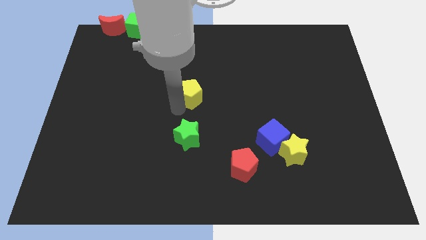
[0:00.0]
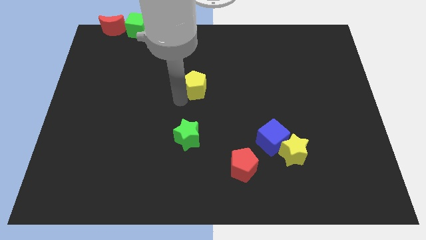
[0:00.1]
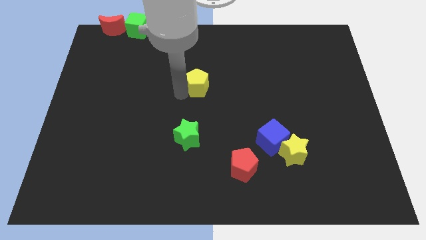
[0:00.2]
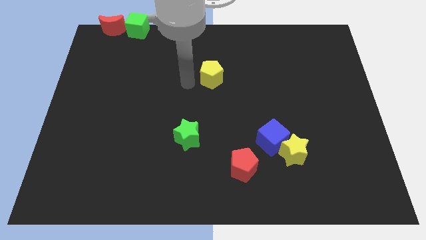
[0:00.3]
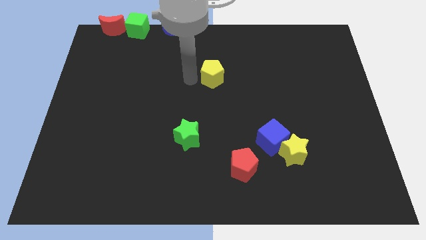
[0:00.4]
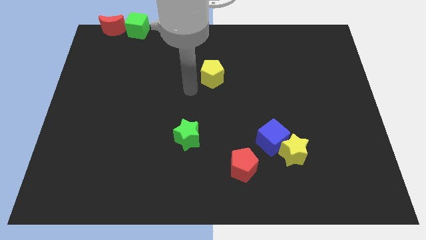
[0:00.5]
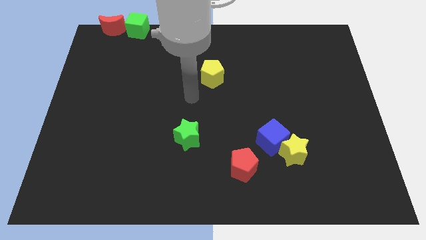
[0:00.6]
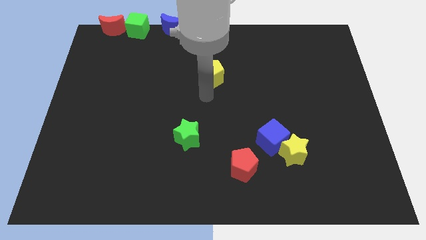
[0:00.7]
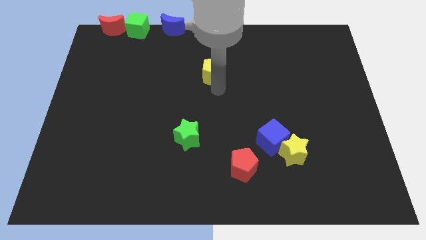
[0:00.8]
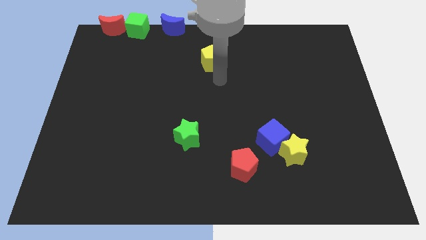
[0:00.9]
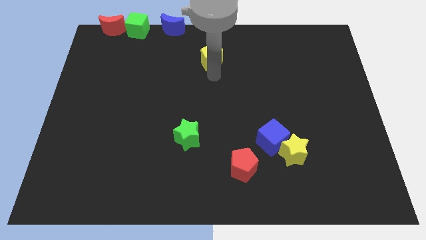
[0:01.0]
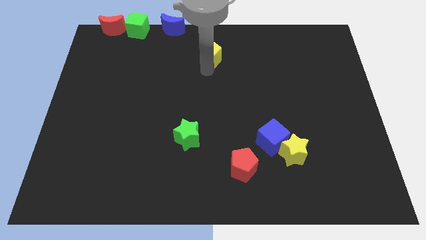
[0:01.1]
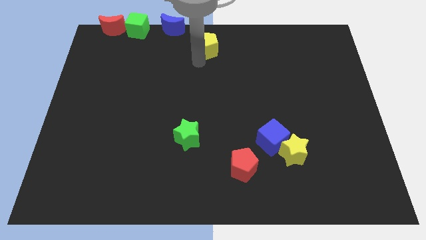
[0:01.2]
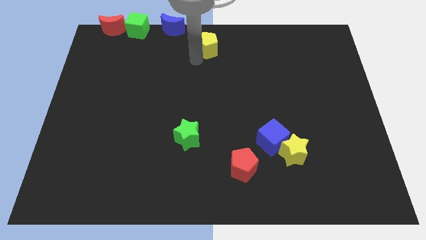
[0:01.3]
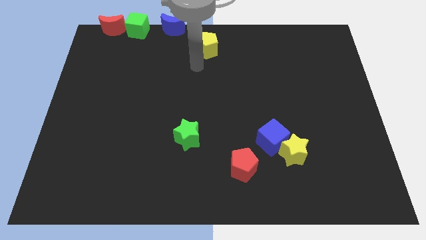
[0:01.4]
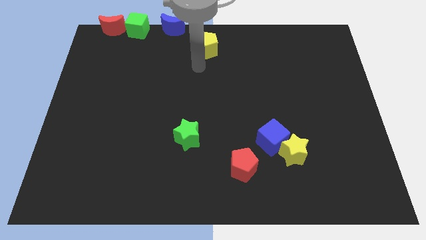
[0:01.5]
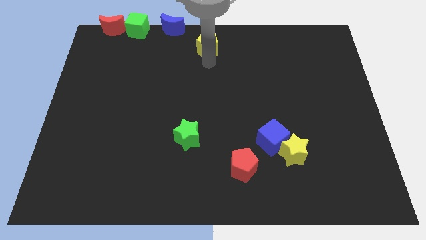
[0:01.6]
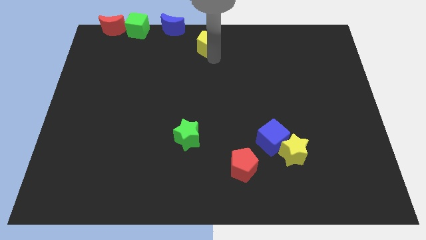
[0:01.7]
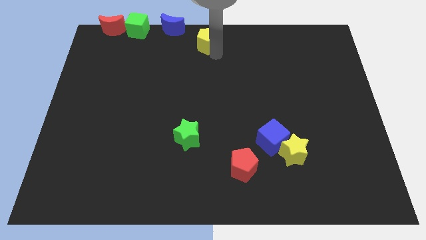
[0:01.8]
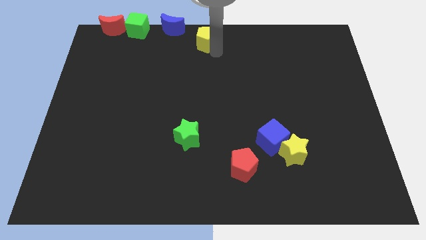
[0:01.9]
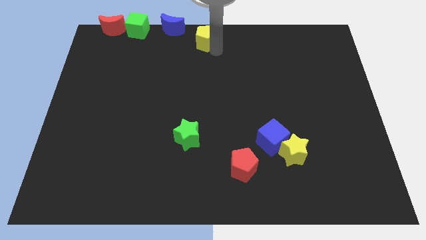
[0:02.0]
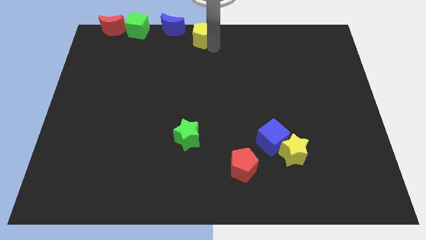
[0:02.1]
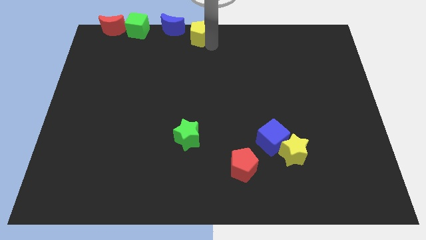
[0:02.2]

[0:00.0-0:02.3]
move the yellow pentagon to the right of the blue crescent

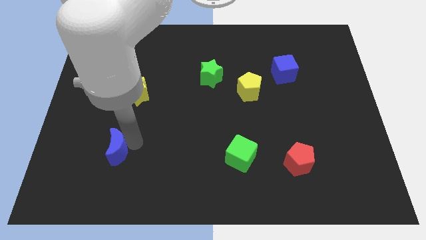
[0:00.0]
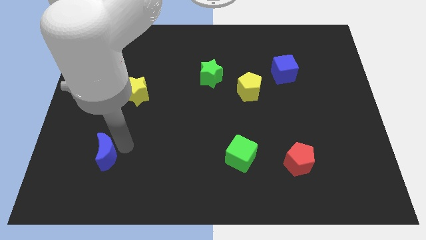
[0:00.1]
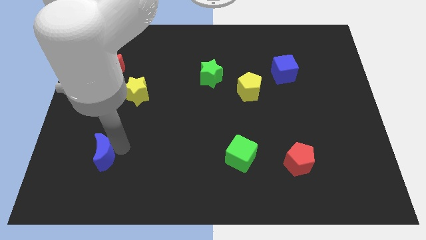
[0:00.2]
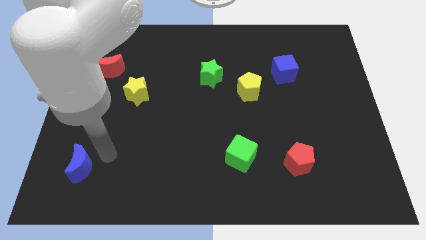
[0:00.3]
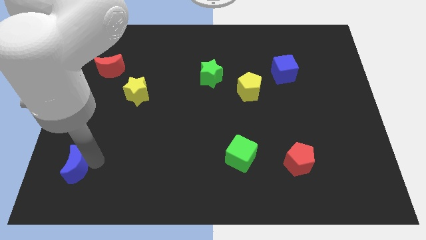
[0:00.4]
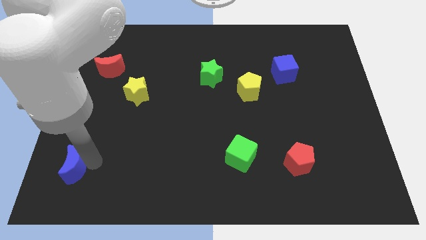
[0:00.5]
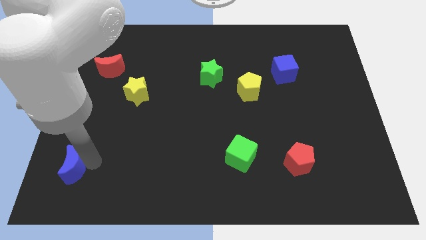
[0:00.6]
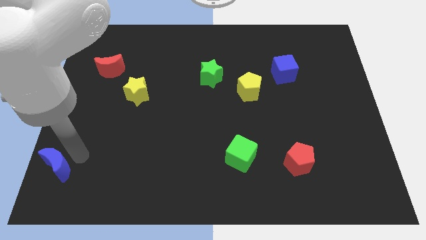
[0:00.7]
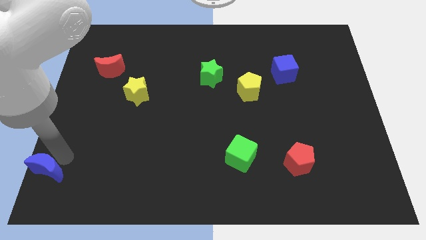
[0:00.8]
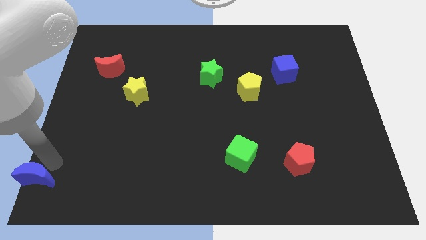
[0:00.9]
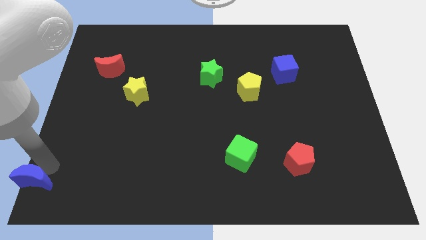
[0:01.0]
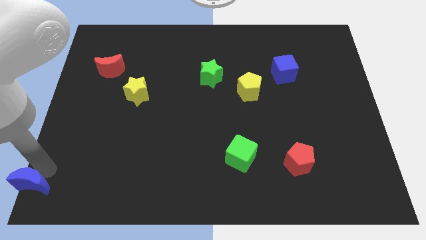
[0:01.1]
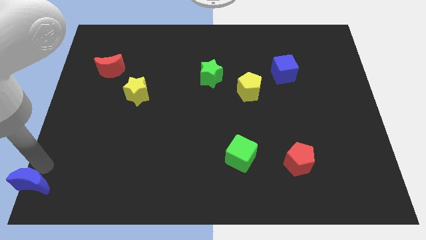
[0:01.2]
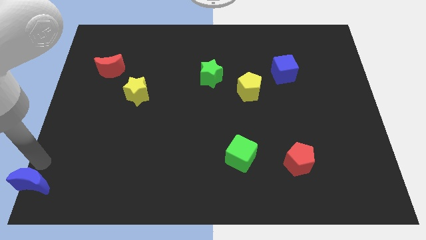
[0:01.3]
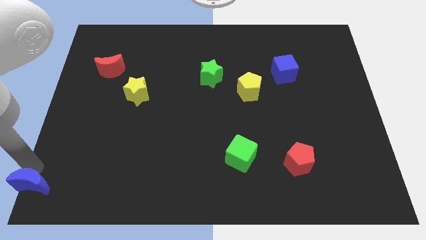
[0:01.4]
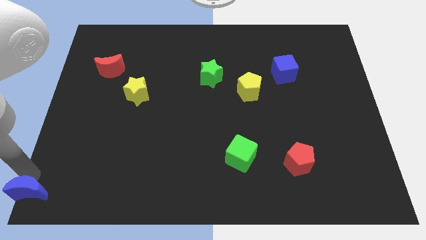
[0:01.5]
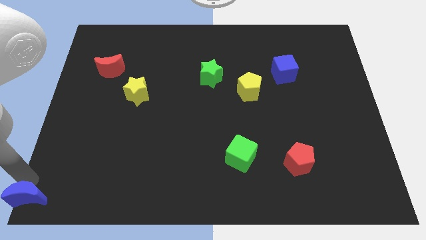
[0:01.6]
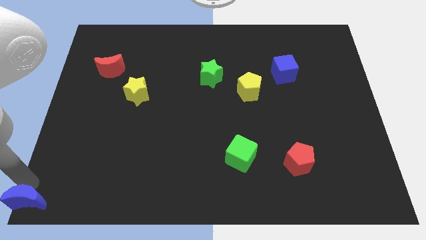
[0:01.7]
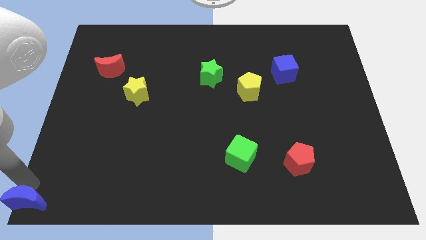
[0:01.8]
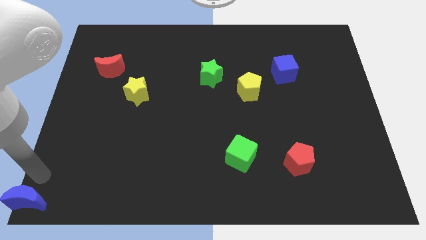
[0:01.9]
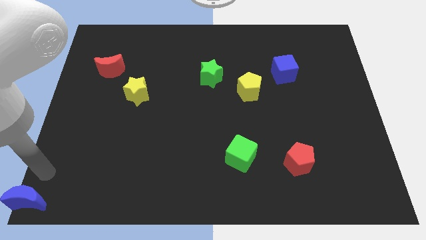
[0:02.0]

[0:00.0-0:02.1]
place the blue crescent at the bottom left corner of the board

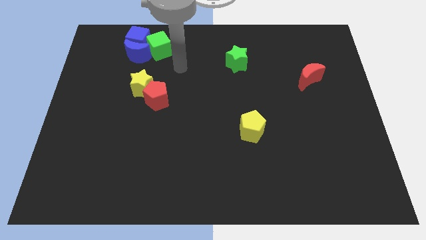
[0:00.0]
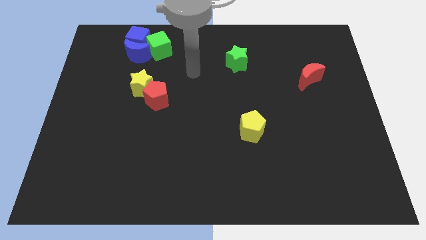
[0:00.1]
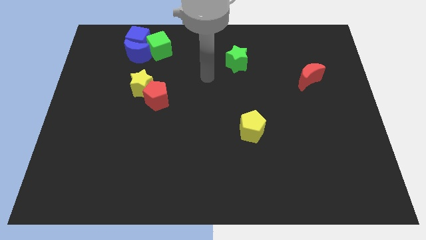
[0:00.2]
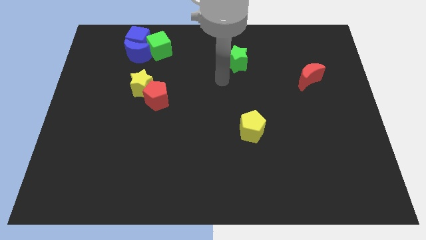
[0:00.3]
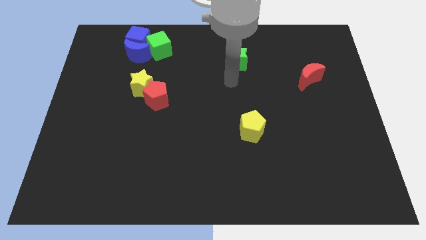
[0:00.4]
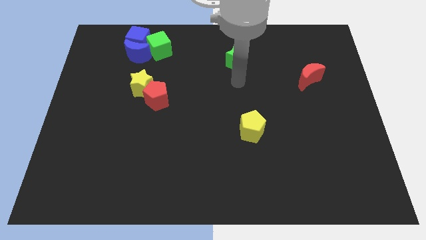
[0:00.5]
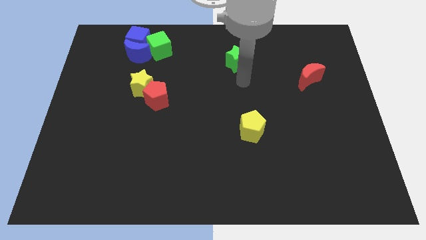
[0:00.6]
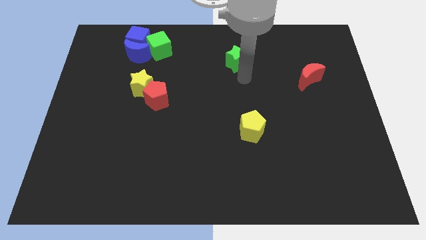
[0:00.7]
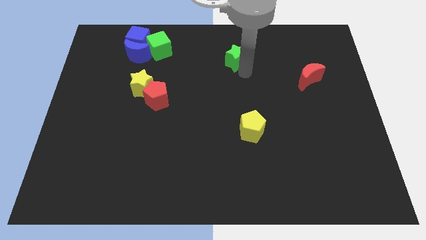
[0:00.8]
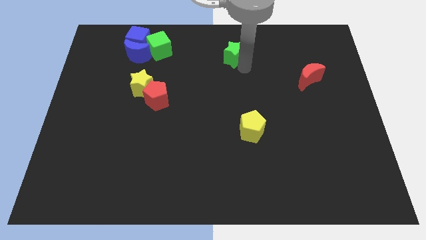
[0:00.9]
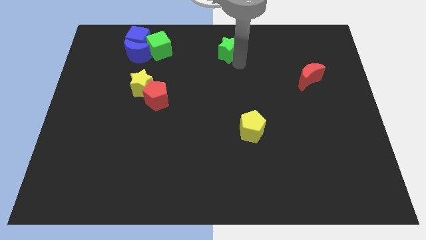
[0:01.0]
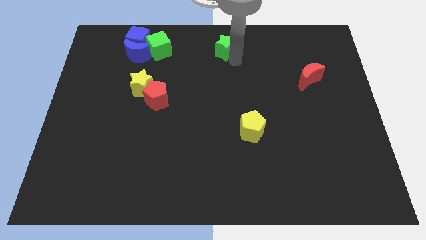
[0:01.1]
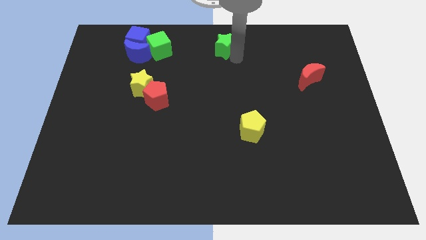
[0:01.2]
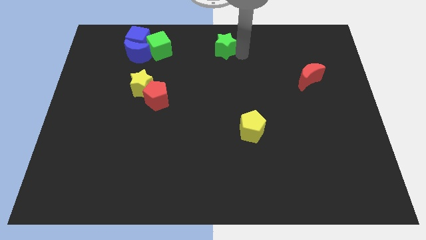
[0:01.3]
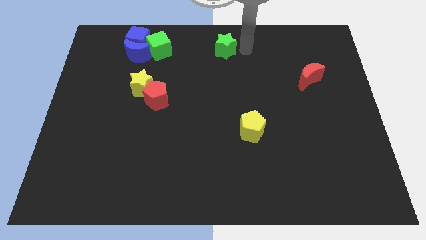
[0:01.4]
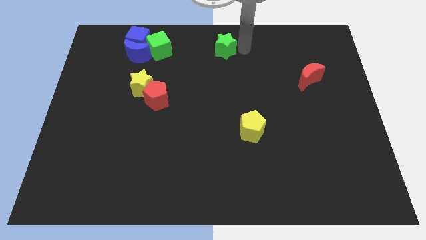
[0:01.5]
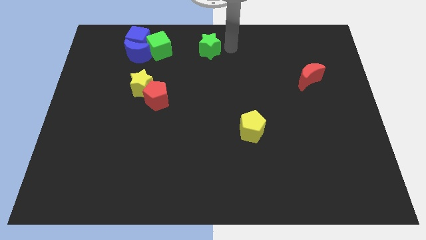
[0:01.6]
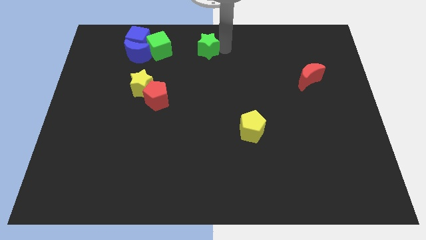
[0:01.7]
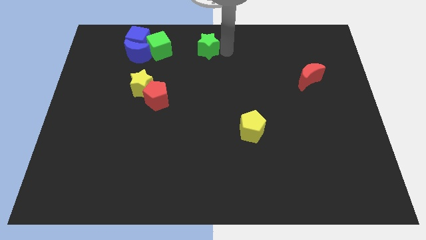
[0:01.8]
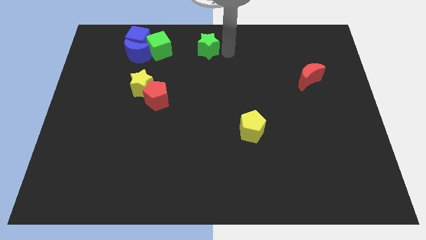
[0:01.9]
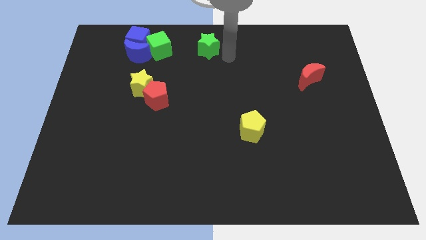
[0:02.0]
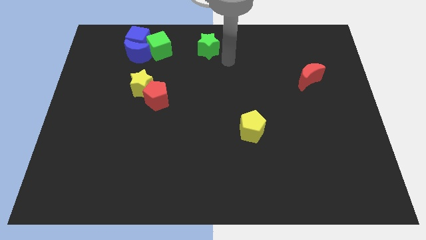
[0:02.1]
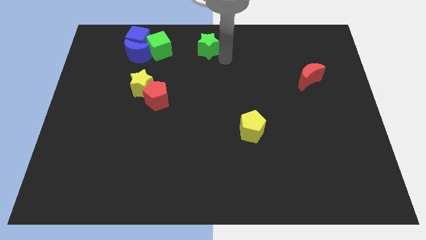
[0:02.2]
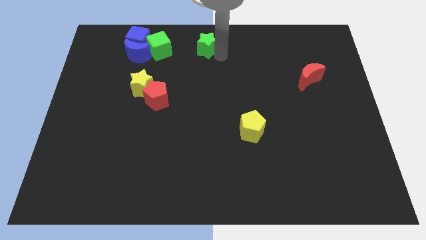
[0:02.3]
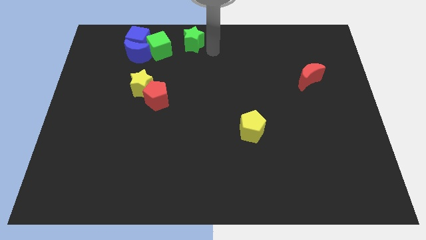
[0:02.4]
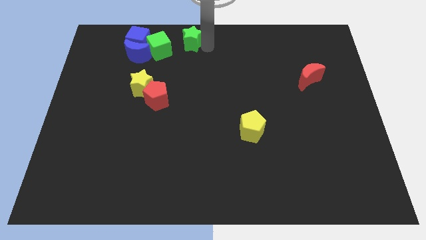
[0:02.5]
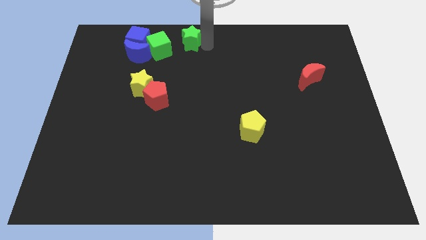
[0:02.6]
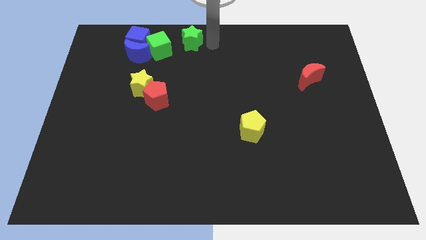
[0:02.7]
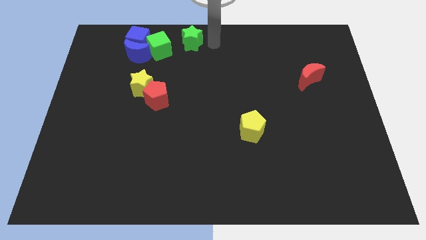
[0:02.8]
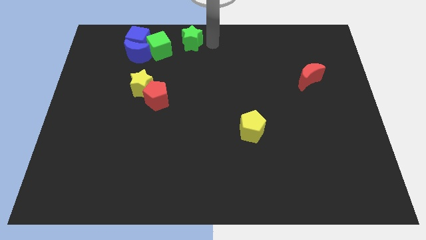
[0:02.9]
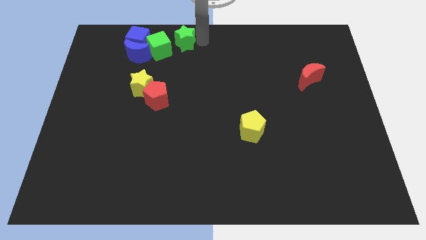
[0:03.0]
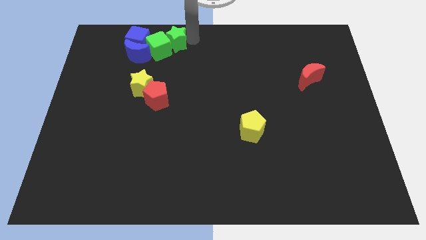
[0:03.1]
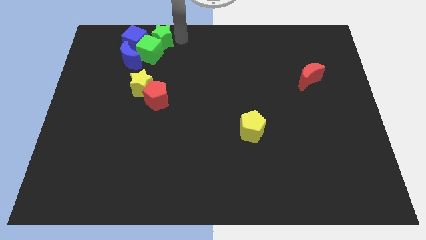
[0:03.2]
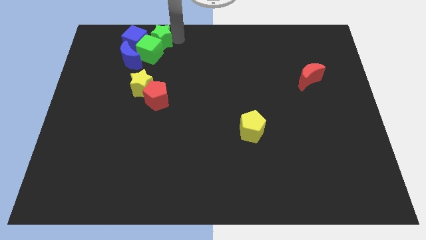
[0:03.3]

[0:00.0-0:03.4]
push the green star into green cube

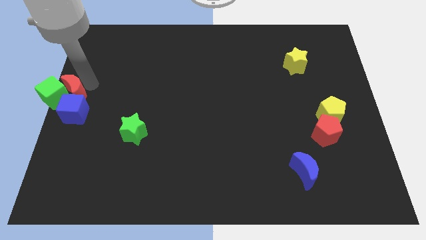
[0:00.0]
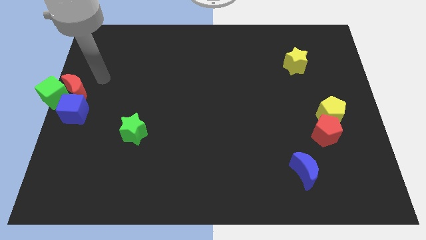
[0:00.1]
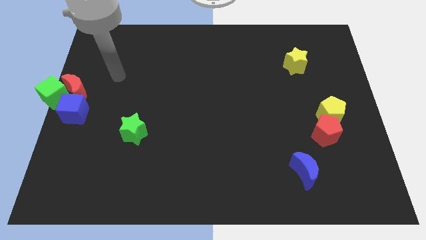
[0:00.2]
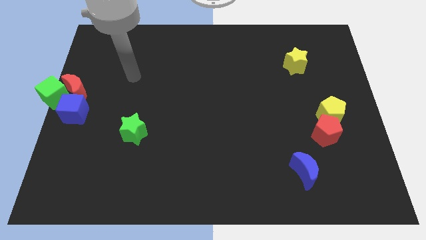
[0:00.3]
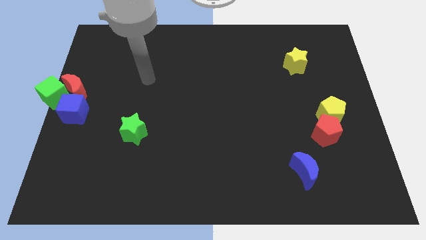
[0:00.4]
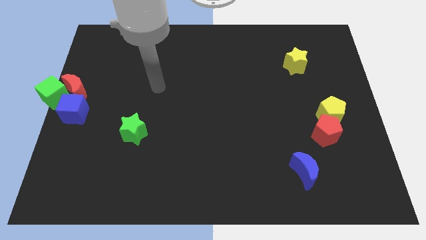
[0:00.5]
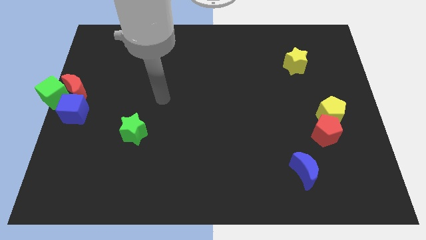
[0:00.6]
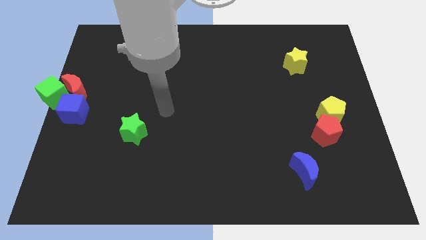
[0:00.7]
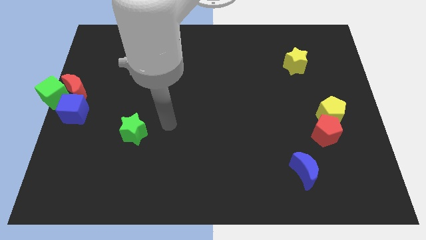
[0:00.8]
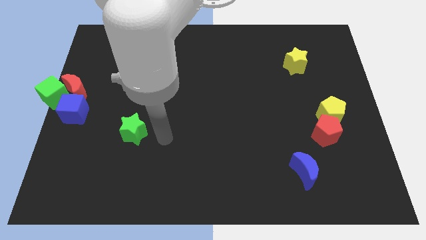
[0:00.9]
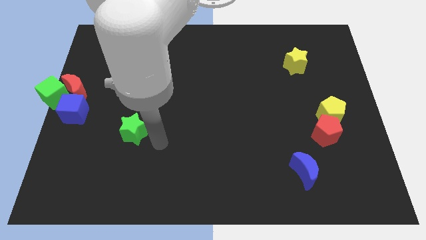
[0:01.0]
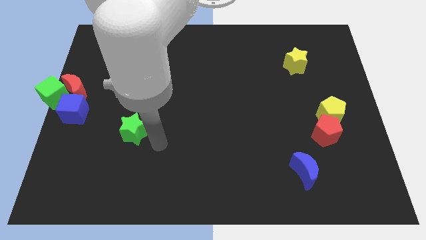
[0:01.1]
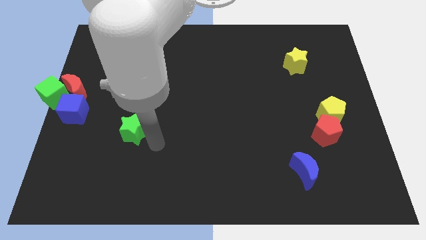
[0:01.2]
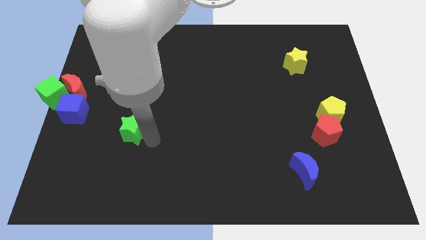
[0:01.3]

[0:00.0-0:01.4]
place the arm right to the green star
